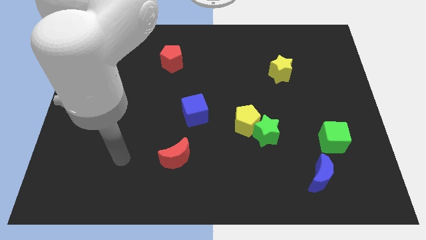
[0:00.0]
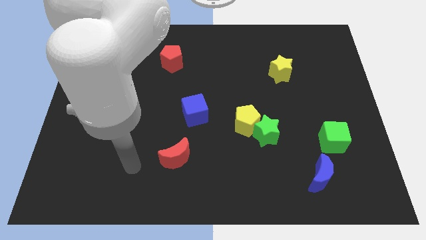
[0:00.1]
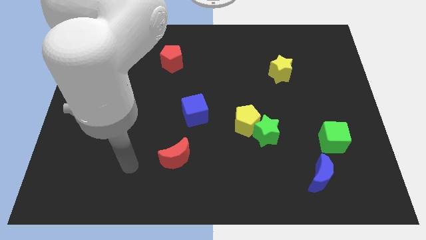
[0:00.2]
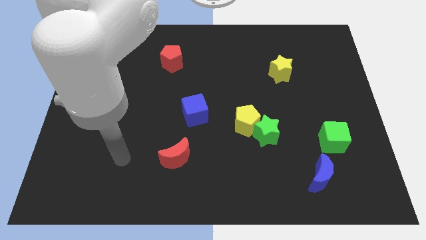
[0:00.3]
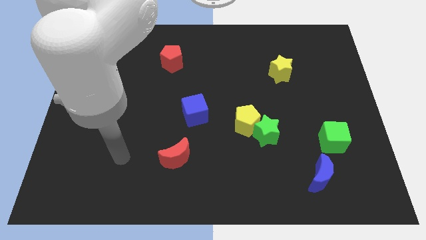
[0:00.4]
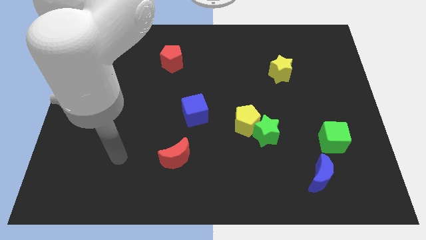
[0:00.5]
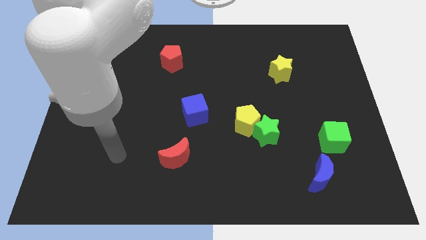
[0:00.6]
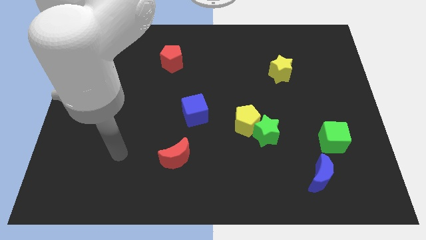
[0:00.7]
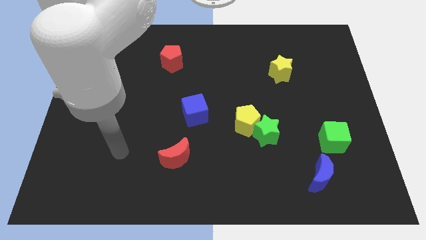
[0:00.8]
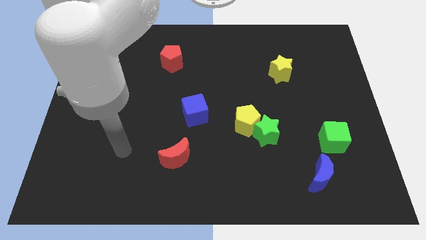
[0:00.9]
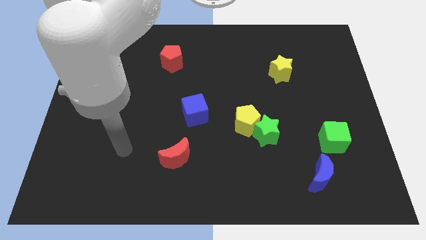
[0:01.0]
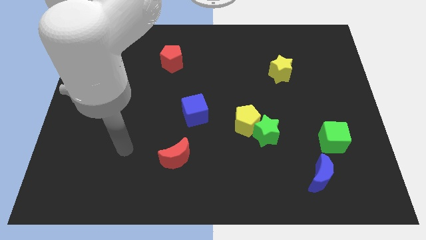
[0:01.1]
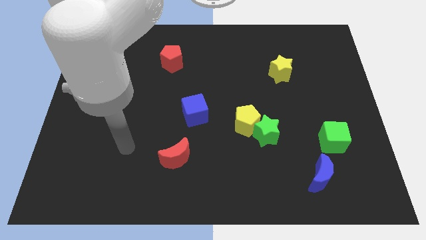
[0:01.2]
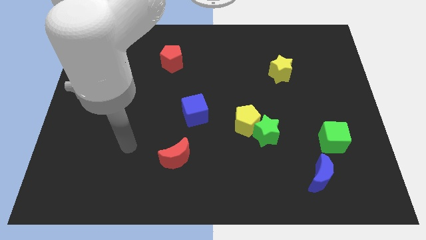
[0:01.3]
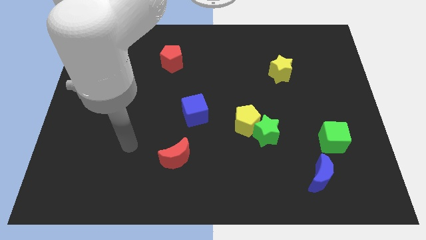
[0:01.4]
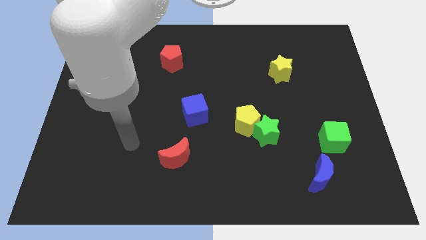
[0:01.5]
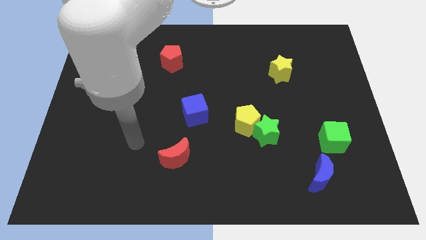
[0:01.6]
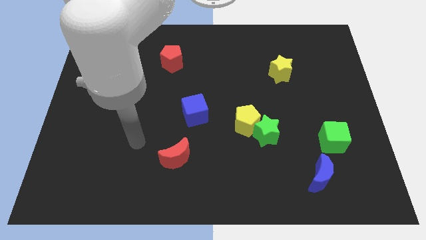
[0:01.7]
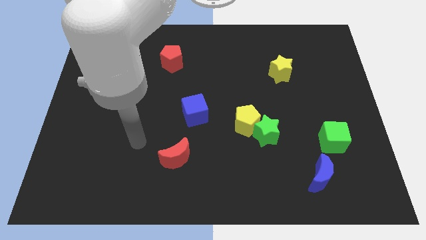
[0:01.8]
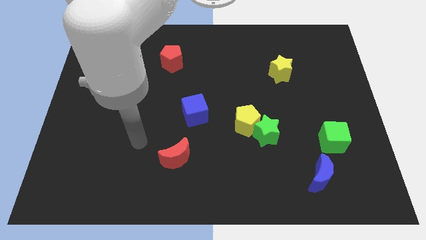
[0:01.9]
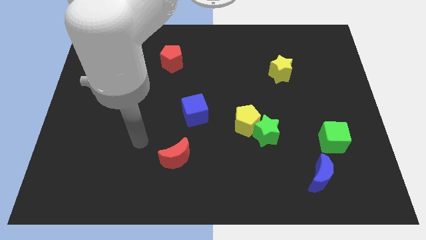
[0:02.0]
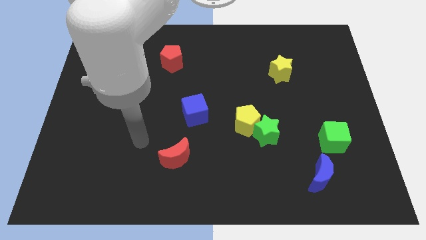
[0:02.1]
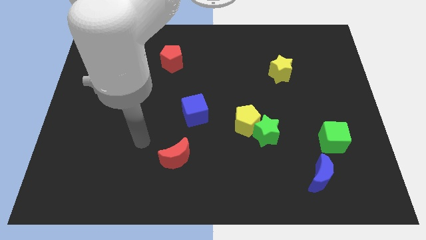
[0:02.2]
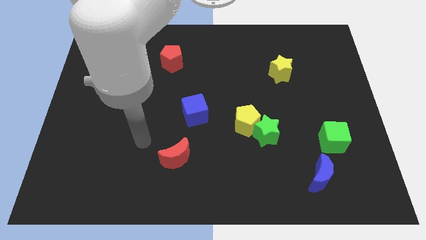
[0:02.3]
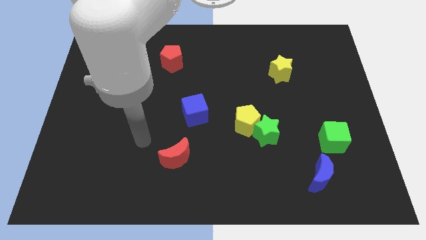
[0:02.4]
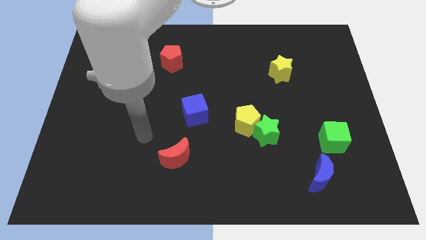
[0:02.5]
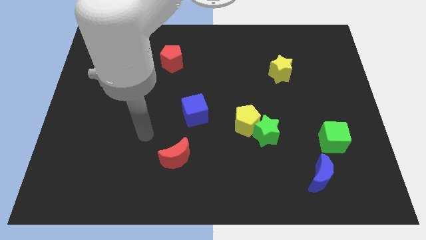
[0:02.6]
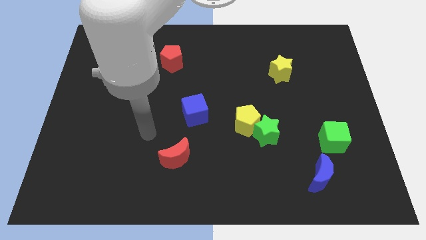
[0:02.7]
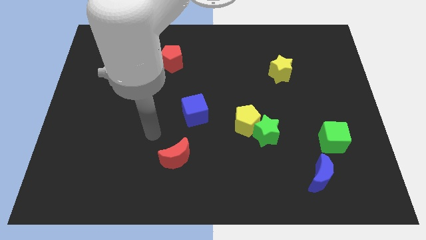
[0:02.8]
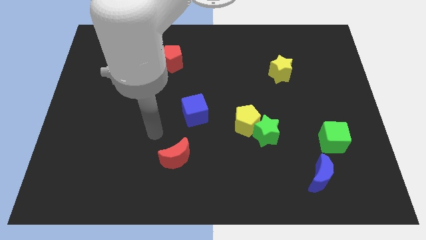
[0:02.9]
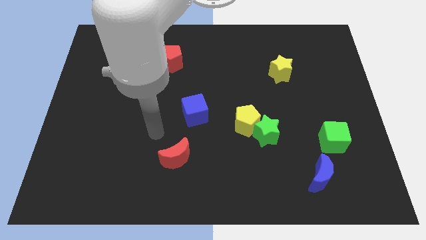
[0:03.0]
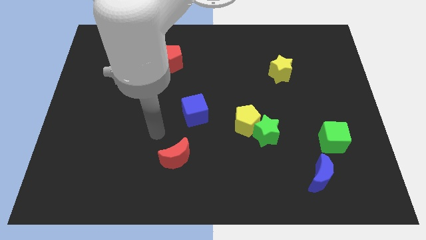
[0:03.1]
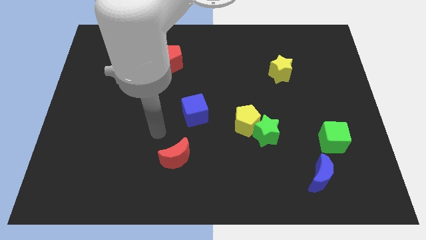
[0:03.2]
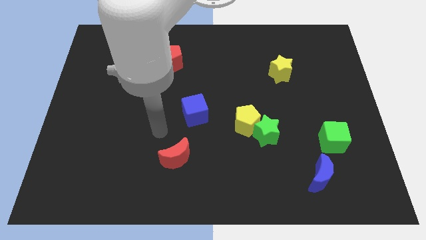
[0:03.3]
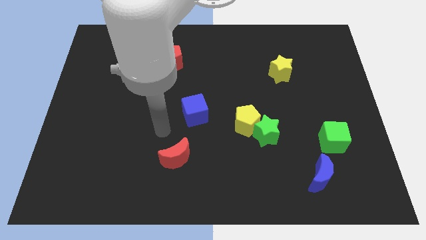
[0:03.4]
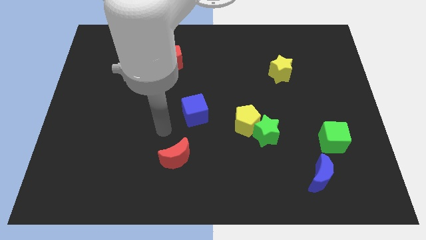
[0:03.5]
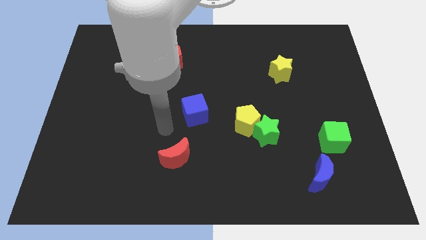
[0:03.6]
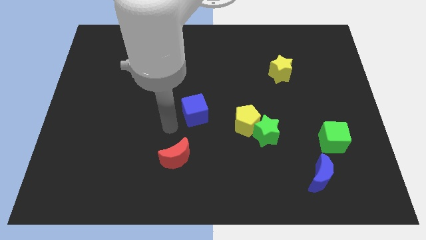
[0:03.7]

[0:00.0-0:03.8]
move your arm towards the blue cube

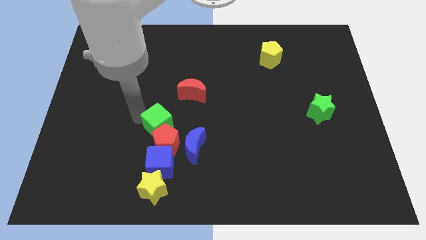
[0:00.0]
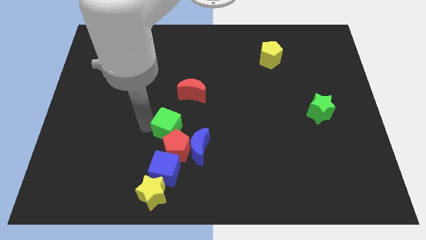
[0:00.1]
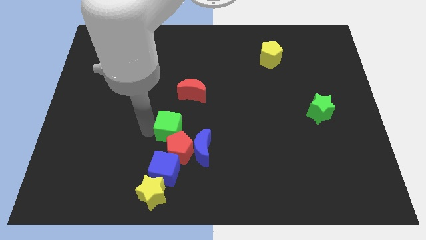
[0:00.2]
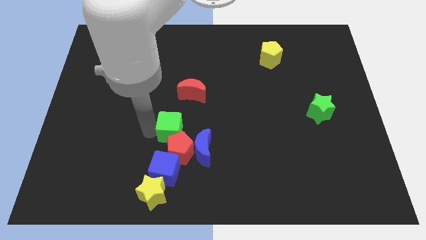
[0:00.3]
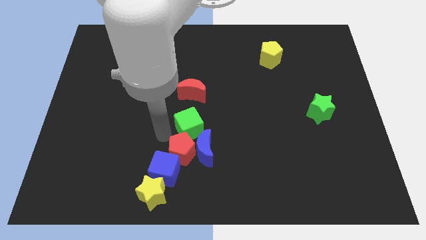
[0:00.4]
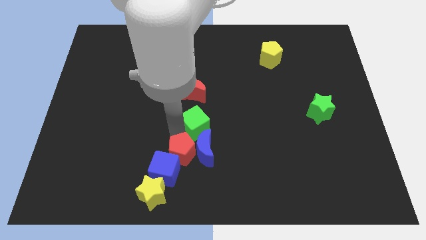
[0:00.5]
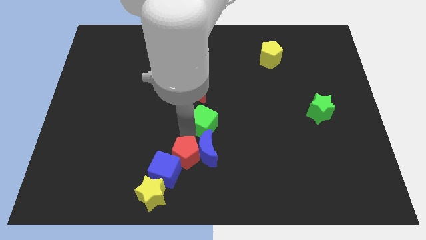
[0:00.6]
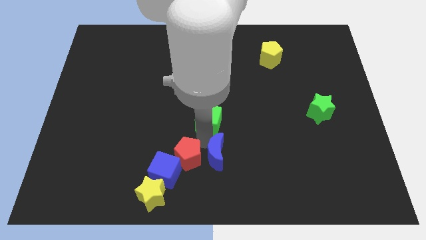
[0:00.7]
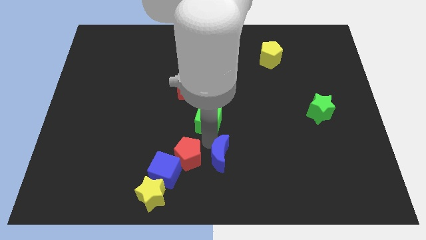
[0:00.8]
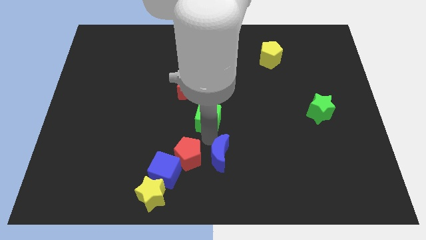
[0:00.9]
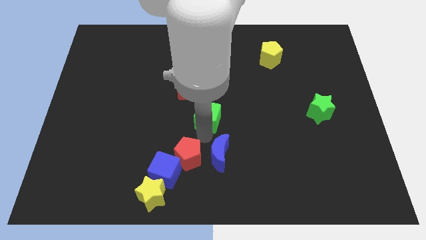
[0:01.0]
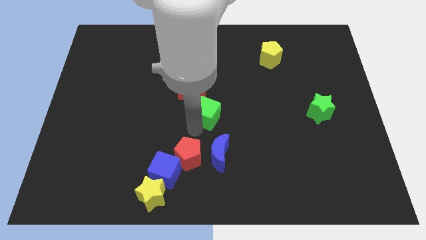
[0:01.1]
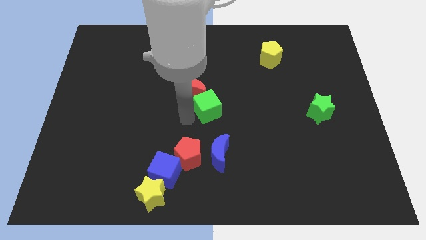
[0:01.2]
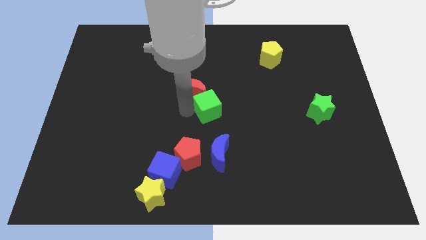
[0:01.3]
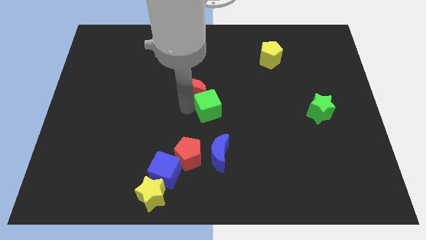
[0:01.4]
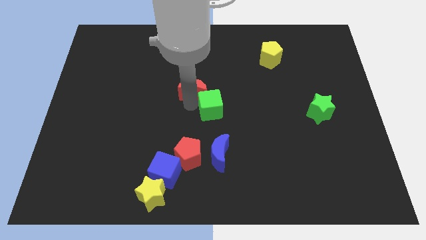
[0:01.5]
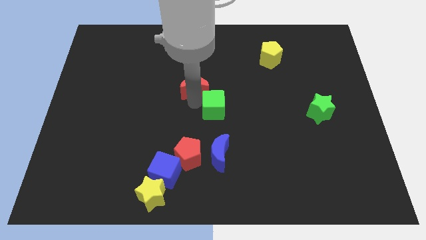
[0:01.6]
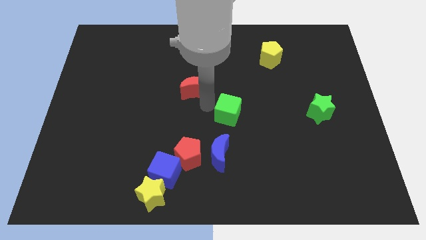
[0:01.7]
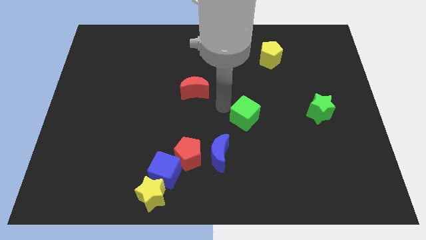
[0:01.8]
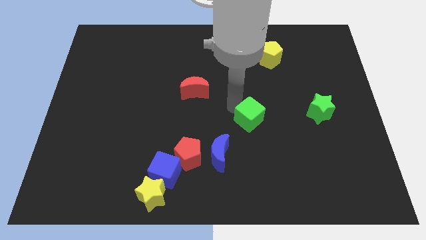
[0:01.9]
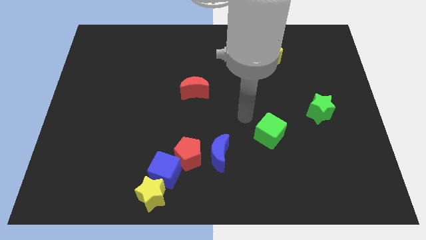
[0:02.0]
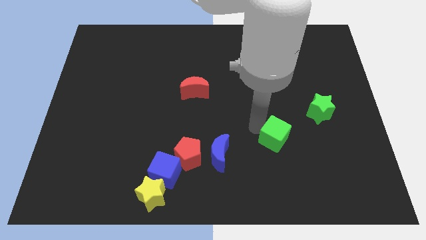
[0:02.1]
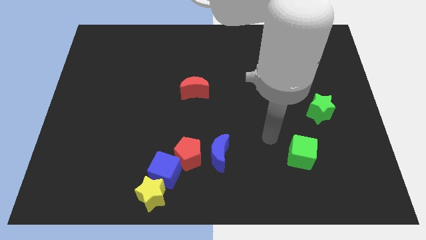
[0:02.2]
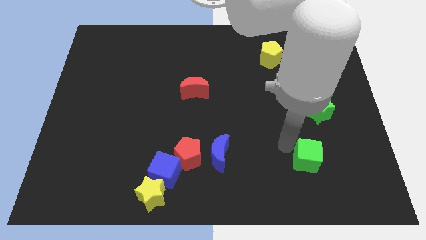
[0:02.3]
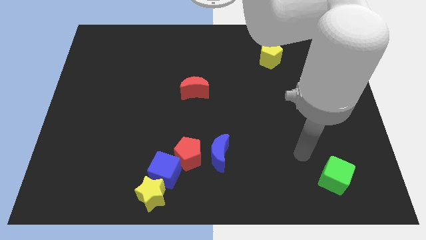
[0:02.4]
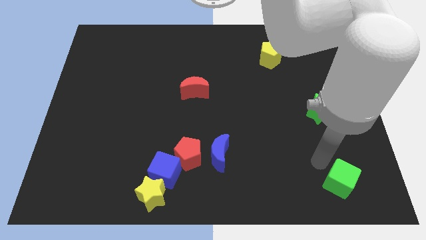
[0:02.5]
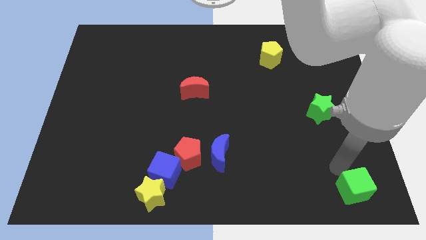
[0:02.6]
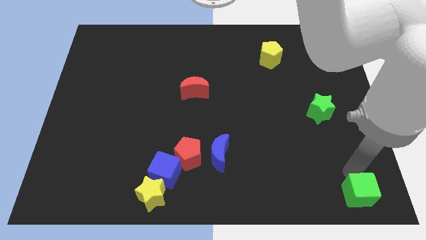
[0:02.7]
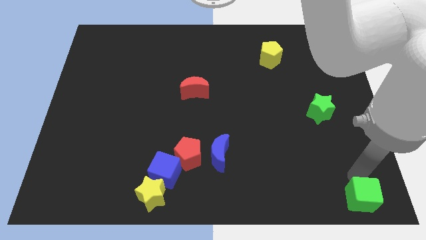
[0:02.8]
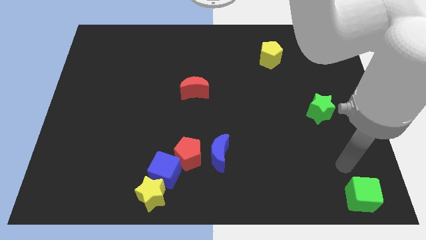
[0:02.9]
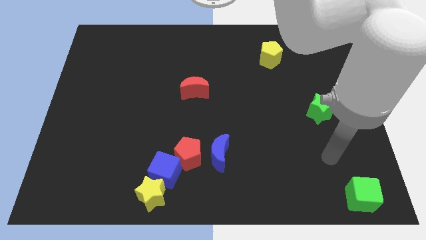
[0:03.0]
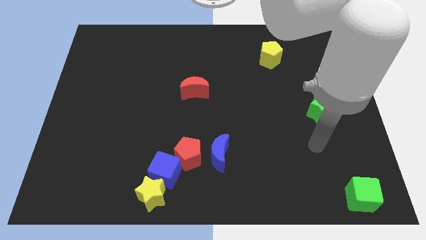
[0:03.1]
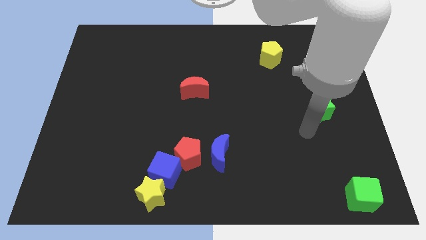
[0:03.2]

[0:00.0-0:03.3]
push the green cube to the right side of the board

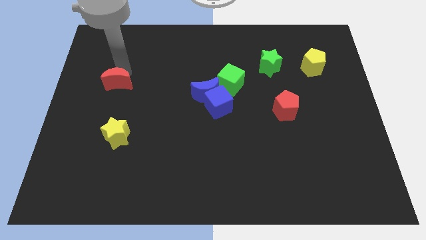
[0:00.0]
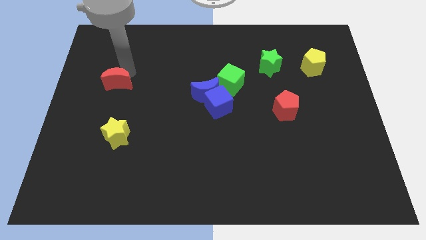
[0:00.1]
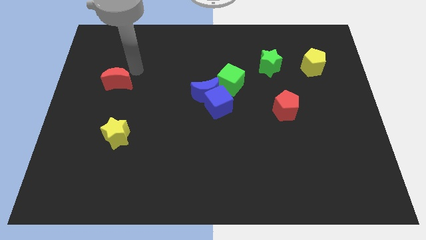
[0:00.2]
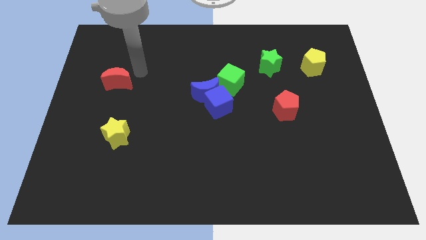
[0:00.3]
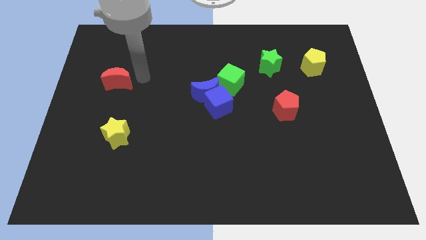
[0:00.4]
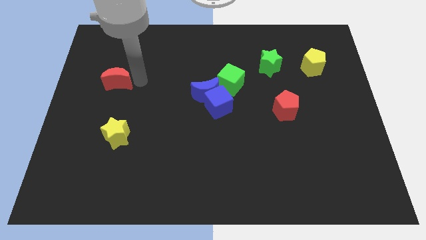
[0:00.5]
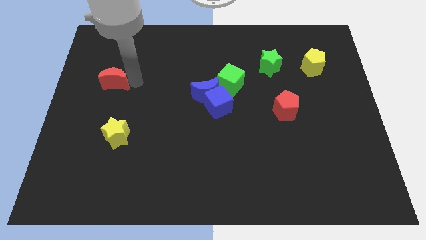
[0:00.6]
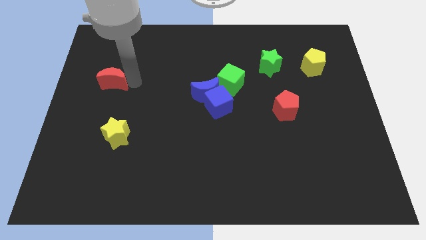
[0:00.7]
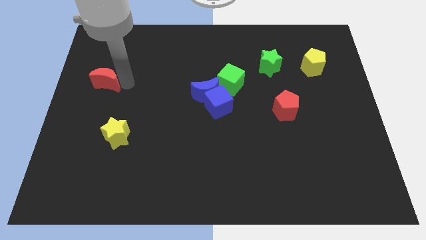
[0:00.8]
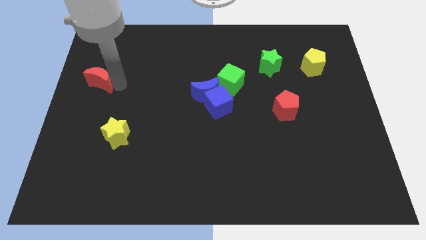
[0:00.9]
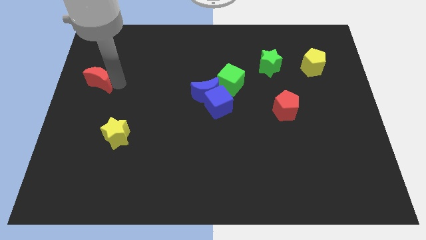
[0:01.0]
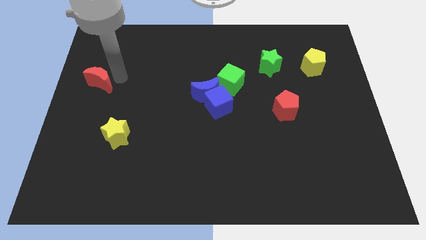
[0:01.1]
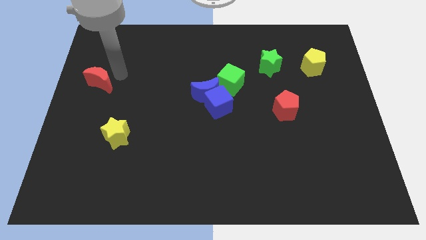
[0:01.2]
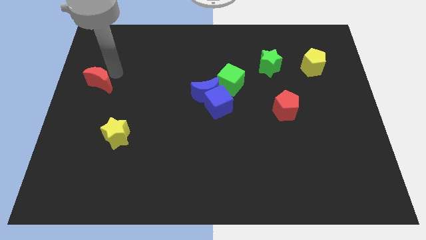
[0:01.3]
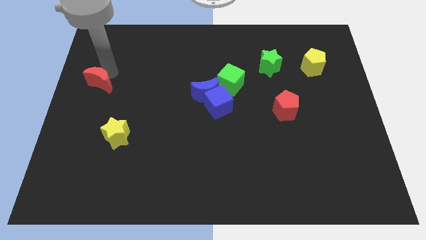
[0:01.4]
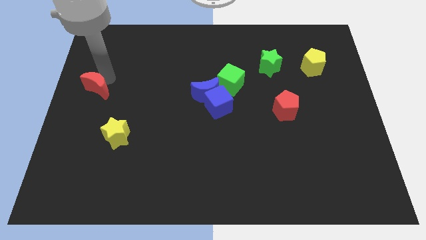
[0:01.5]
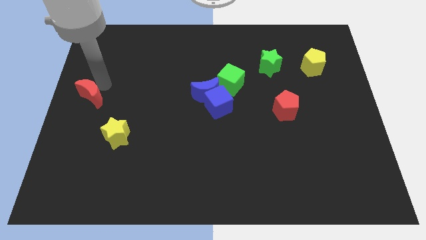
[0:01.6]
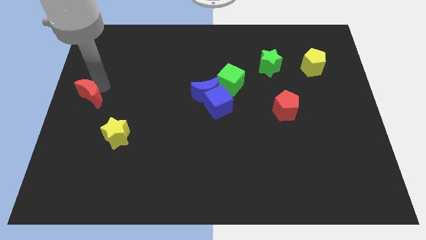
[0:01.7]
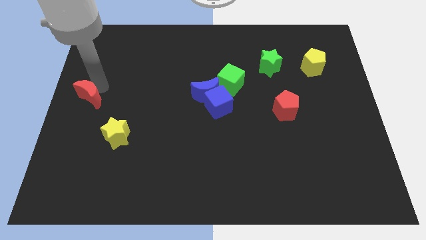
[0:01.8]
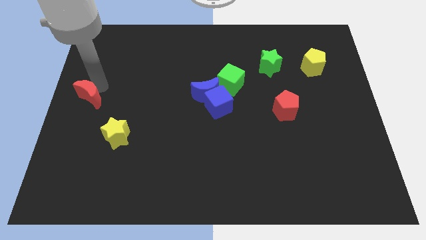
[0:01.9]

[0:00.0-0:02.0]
move the red crescent diagonal to the yellow star

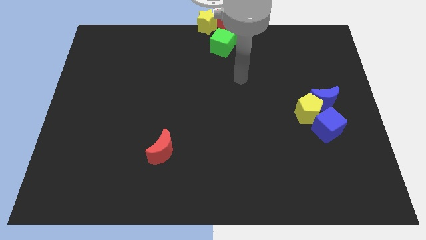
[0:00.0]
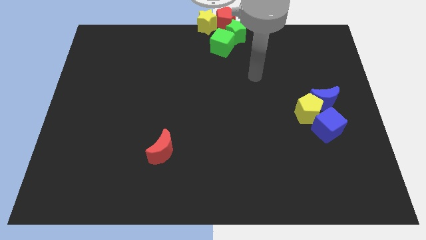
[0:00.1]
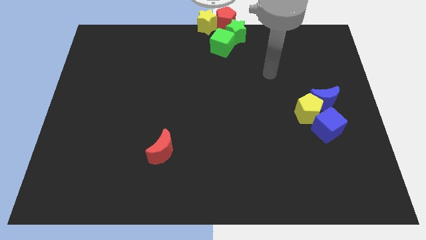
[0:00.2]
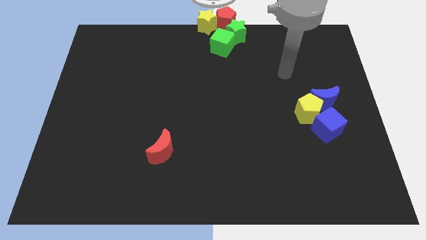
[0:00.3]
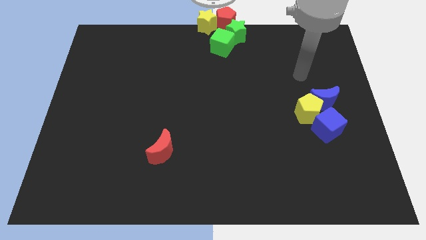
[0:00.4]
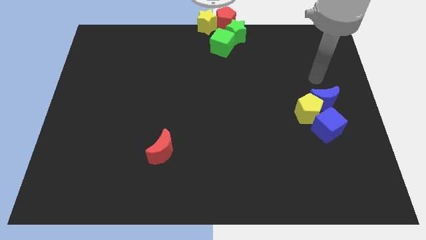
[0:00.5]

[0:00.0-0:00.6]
move your arm to the top of blue crescent
